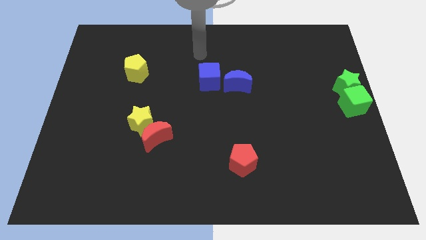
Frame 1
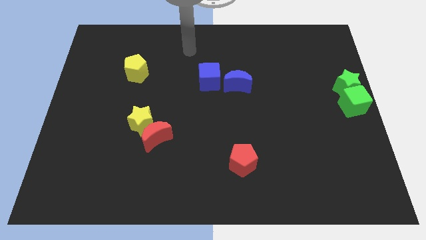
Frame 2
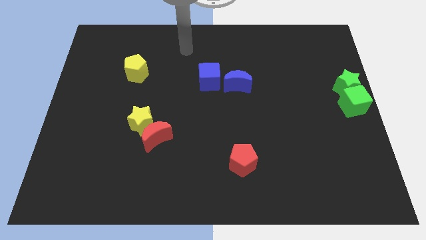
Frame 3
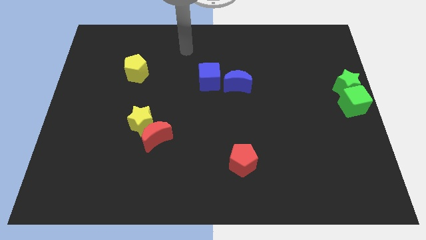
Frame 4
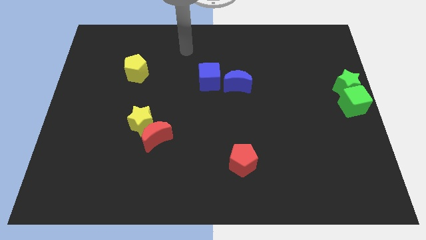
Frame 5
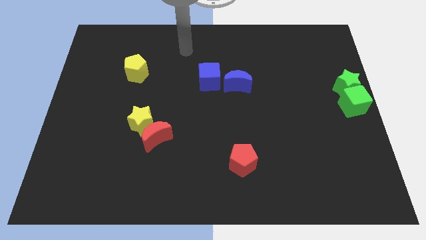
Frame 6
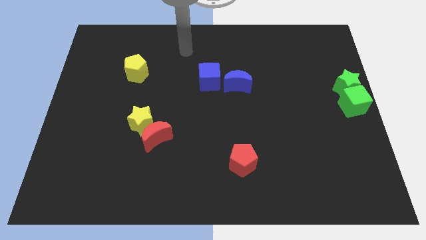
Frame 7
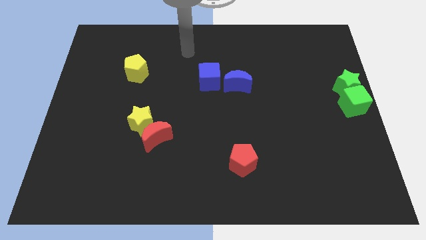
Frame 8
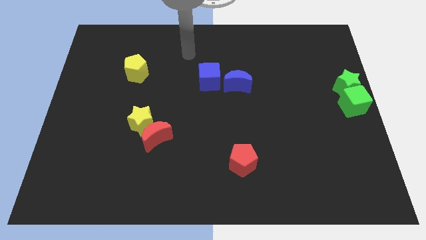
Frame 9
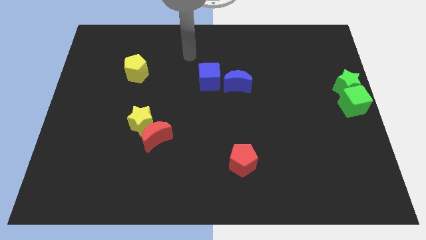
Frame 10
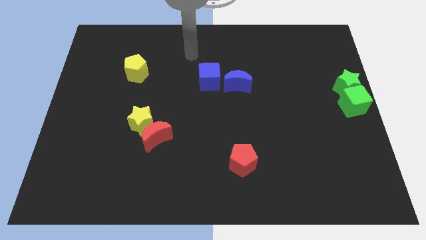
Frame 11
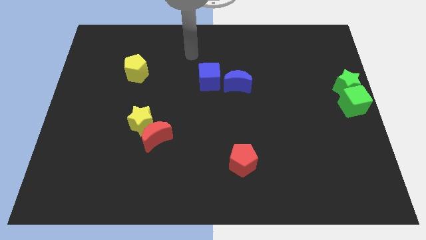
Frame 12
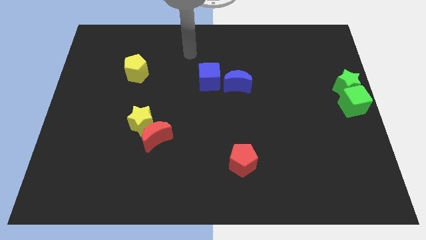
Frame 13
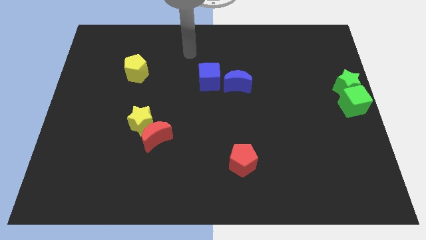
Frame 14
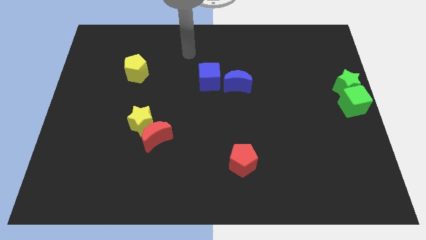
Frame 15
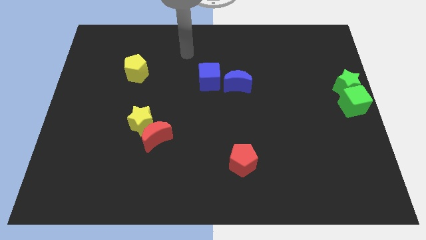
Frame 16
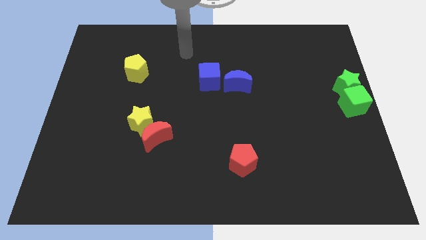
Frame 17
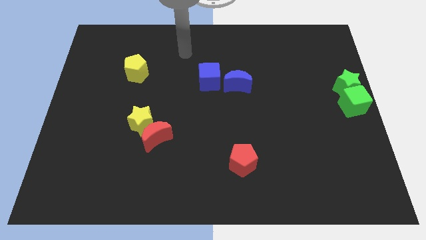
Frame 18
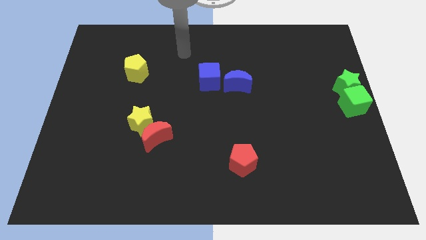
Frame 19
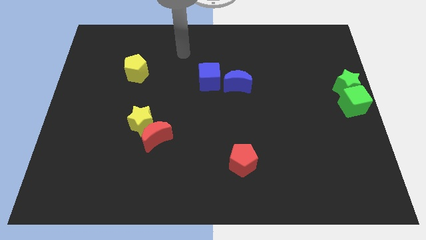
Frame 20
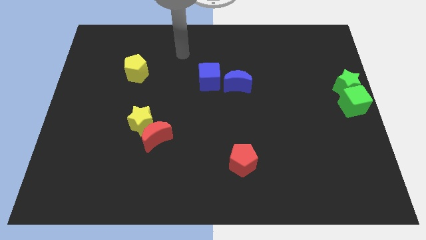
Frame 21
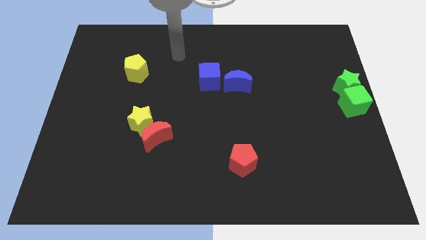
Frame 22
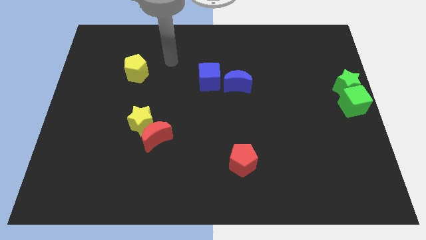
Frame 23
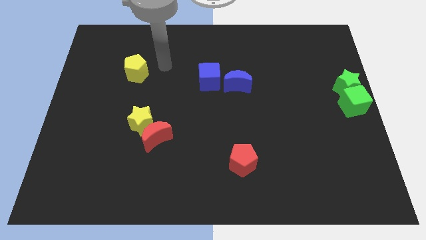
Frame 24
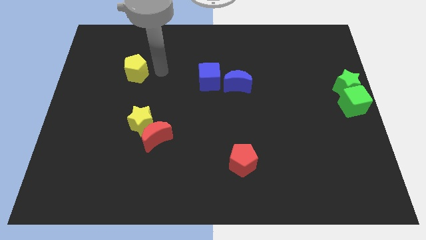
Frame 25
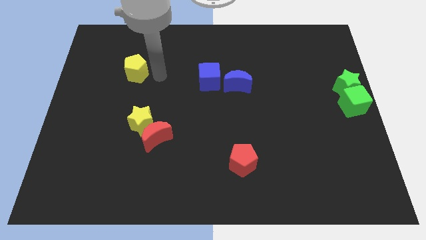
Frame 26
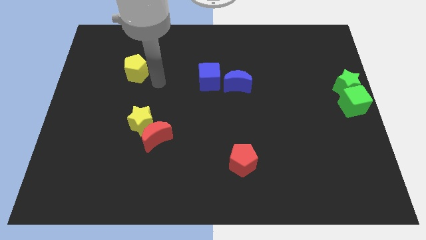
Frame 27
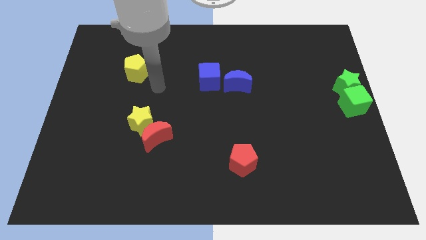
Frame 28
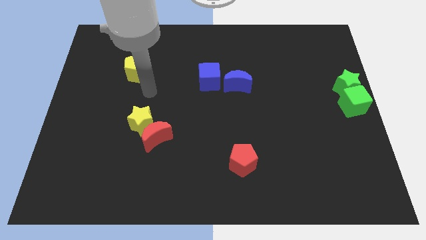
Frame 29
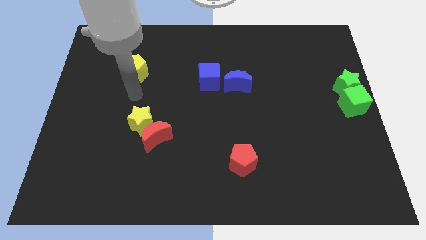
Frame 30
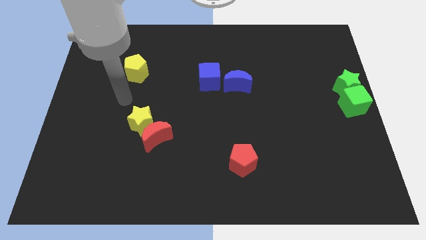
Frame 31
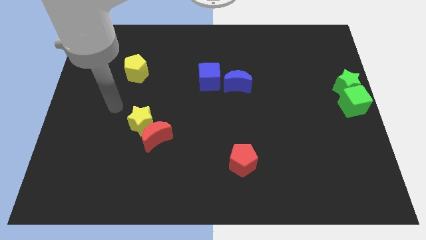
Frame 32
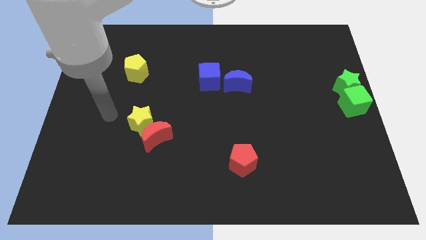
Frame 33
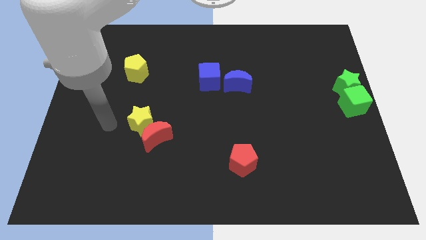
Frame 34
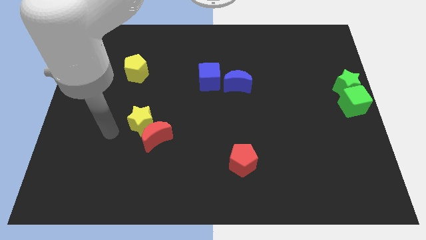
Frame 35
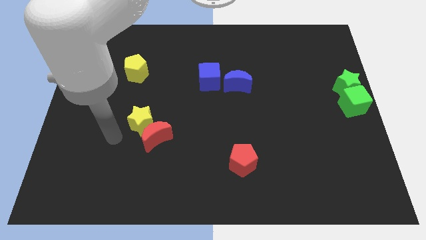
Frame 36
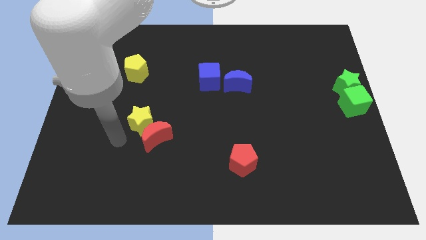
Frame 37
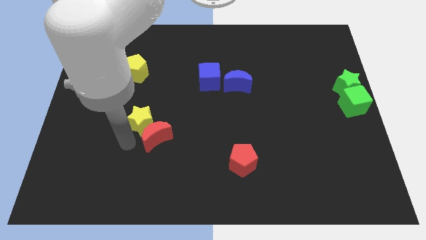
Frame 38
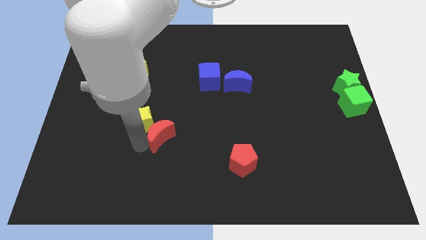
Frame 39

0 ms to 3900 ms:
move the arm to the bottom of the yellow star

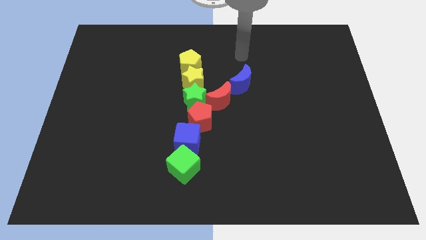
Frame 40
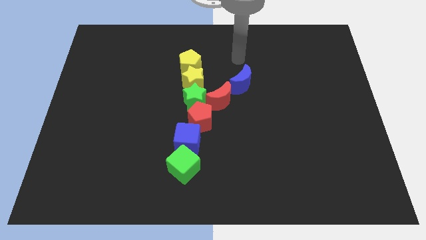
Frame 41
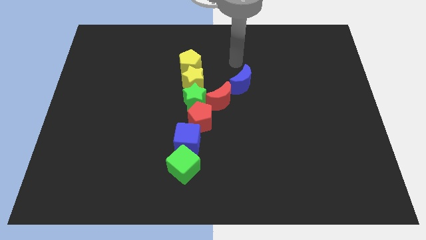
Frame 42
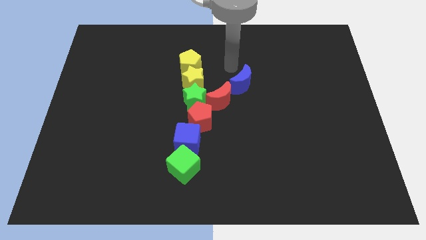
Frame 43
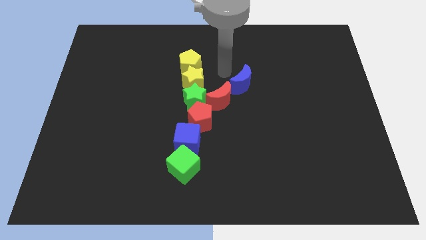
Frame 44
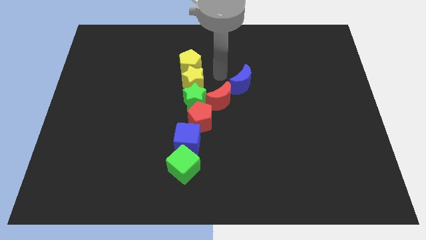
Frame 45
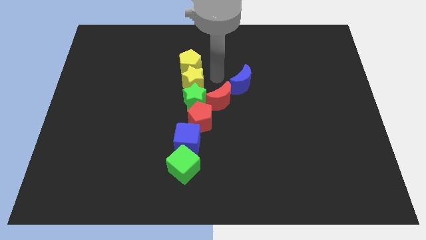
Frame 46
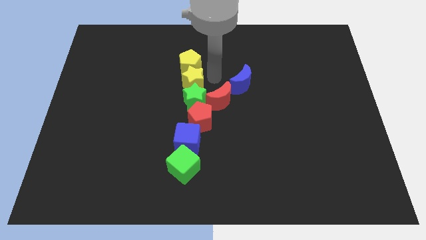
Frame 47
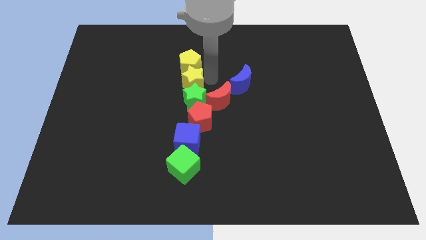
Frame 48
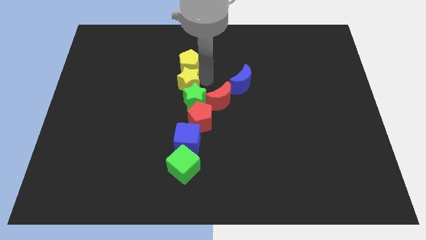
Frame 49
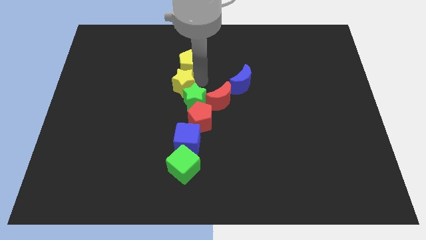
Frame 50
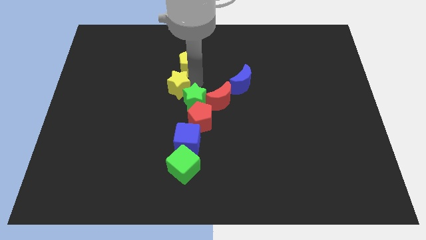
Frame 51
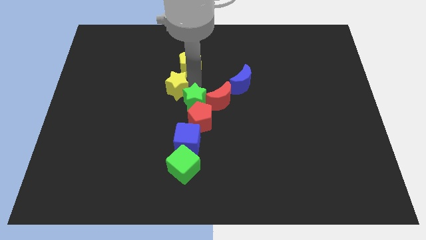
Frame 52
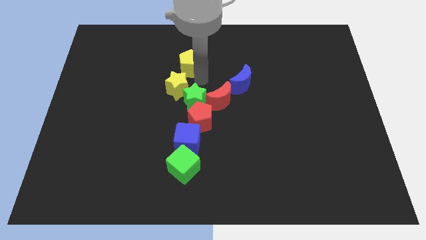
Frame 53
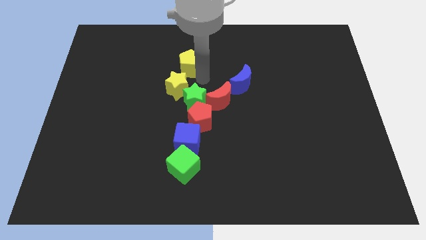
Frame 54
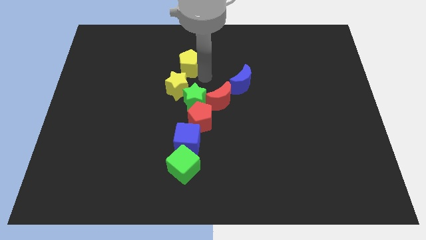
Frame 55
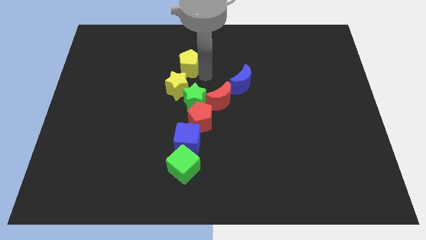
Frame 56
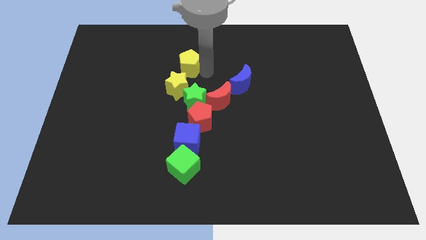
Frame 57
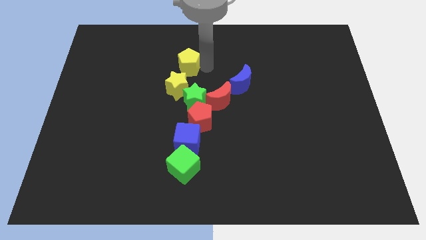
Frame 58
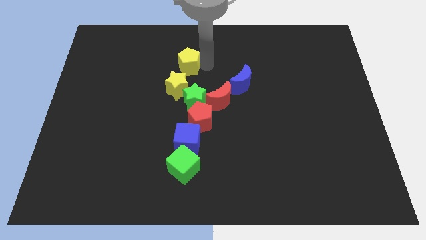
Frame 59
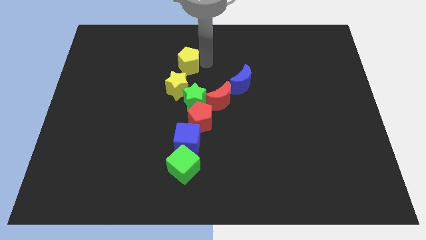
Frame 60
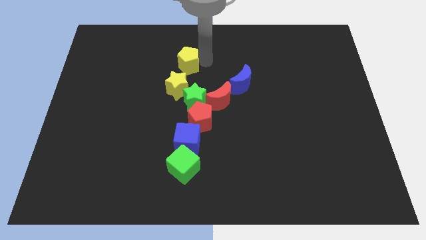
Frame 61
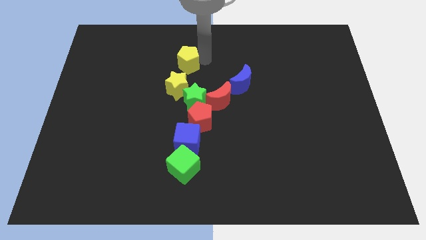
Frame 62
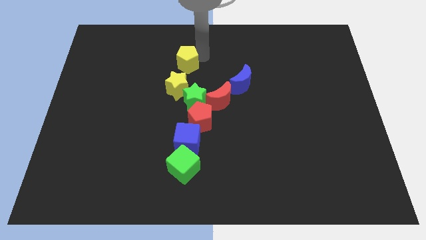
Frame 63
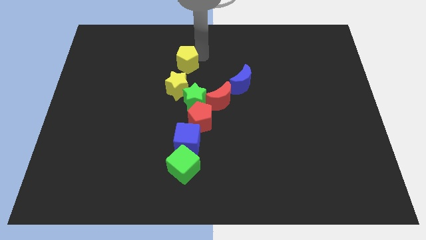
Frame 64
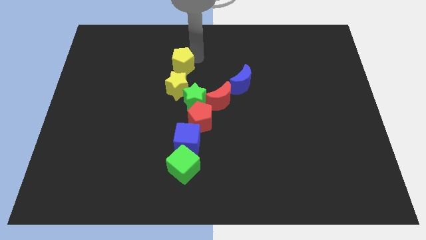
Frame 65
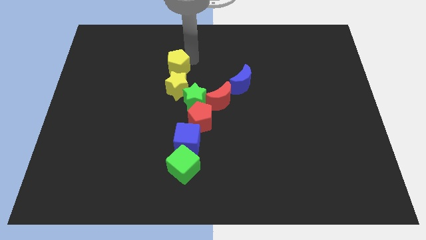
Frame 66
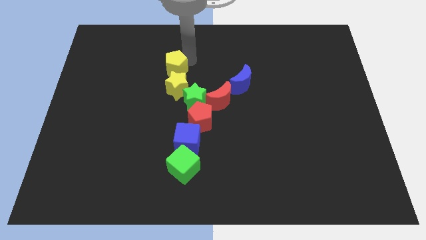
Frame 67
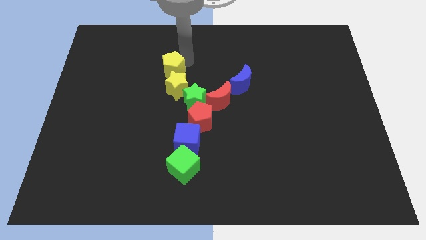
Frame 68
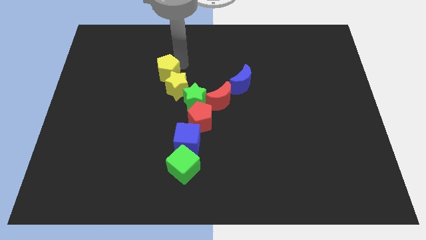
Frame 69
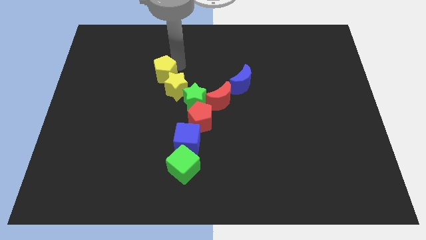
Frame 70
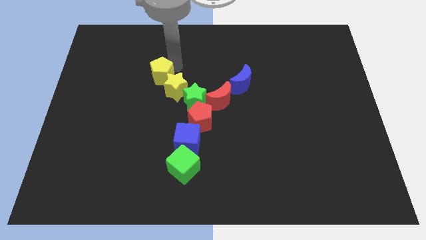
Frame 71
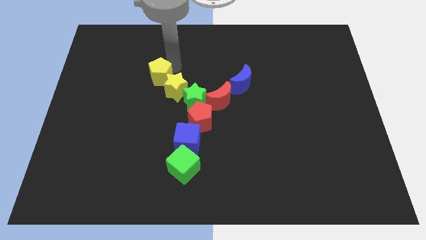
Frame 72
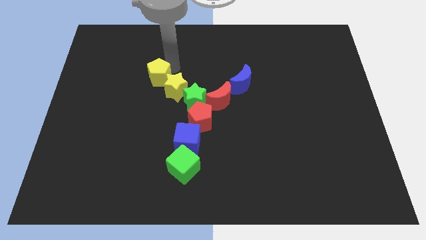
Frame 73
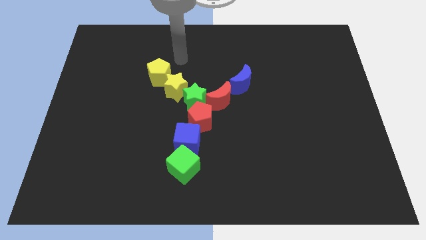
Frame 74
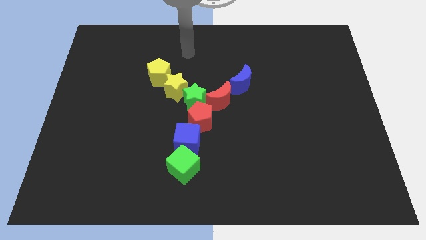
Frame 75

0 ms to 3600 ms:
push the yellow blocks to form a forked cross

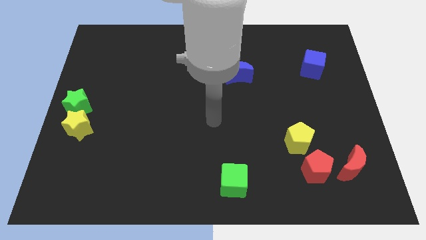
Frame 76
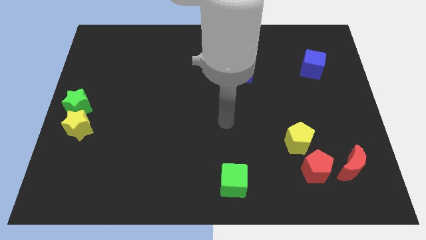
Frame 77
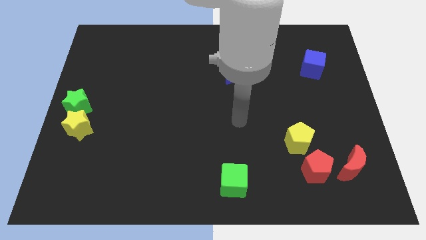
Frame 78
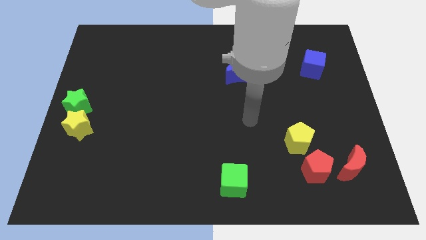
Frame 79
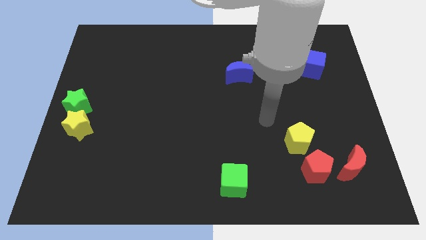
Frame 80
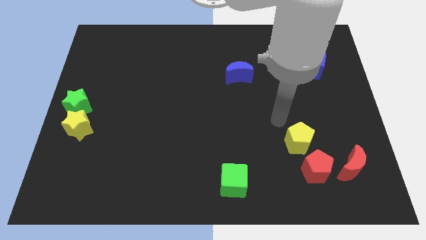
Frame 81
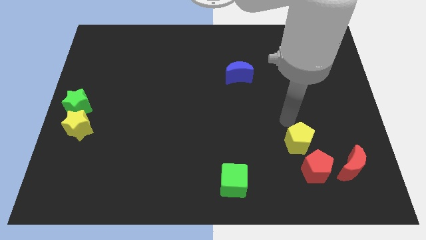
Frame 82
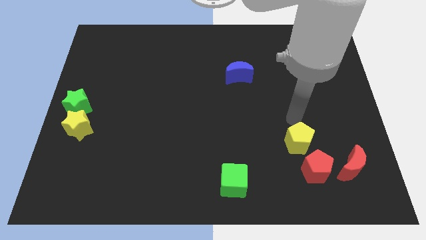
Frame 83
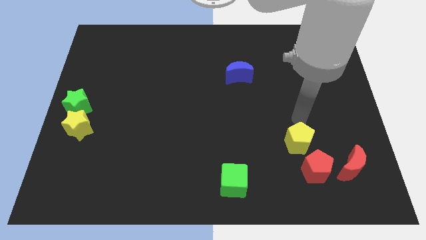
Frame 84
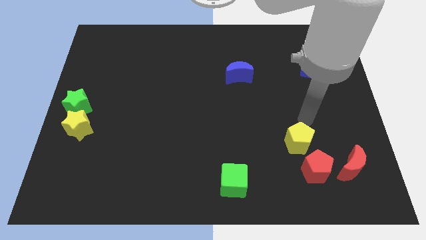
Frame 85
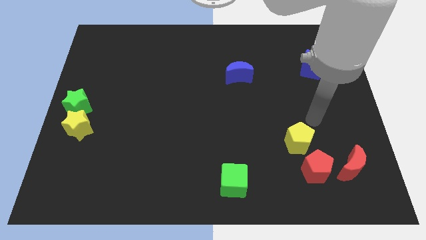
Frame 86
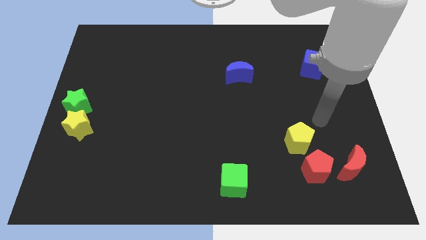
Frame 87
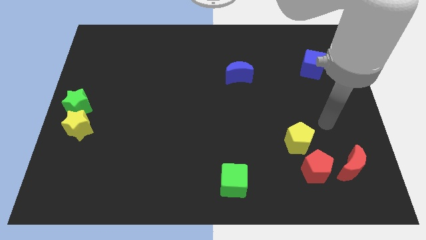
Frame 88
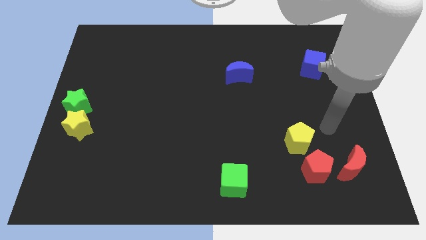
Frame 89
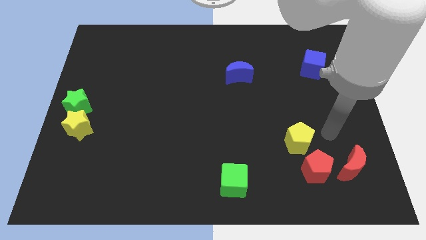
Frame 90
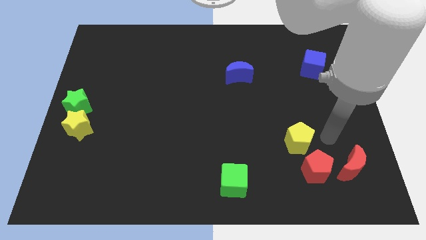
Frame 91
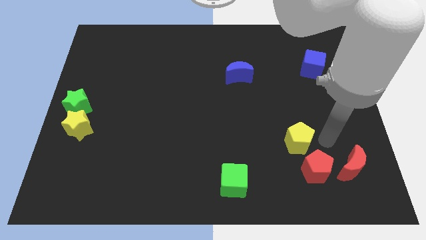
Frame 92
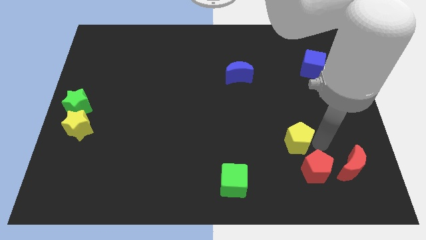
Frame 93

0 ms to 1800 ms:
move your arm to the right of yellow pentagon
